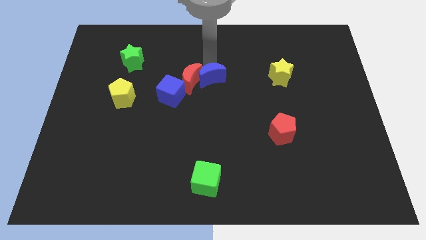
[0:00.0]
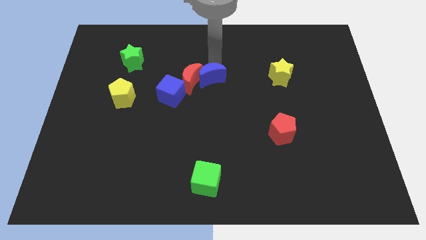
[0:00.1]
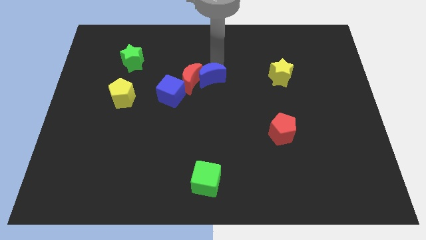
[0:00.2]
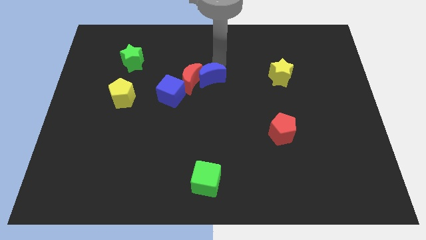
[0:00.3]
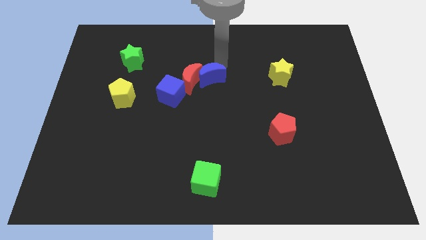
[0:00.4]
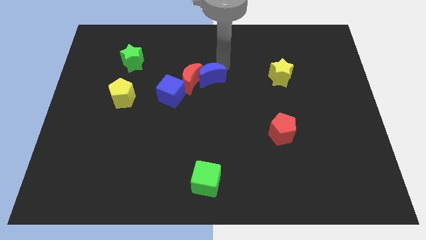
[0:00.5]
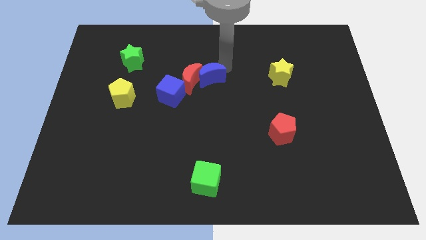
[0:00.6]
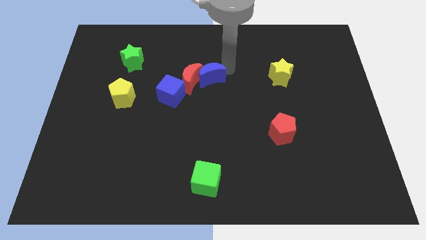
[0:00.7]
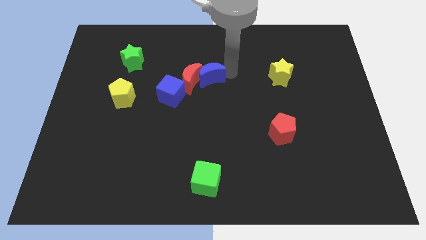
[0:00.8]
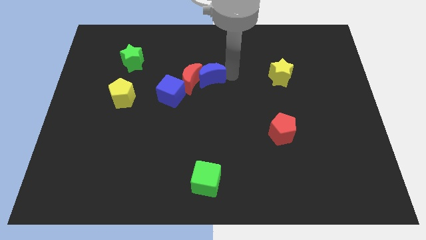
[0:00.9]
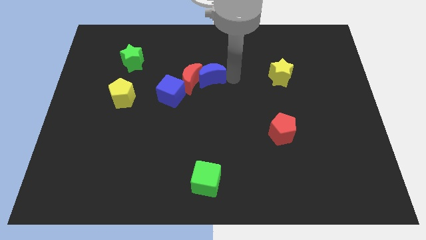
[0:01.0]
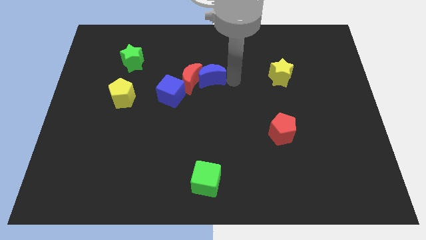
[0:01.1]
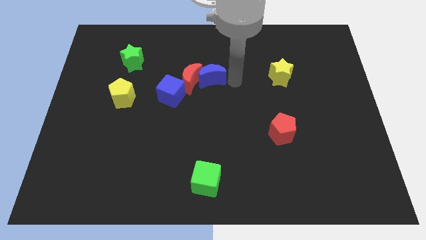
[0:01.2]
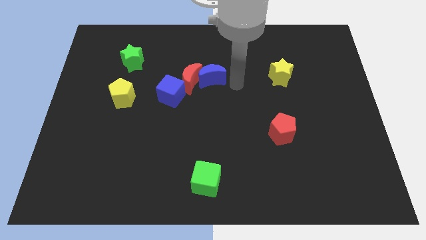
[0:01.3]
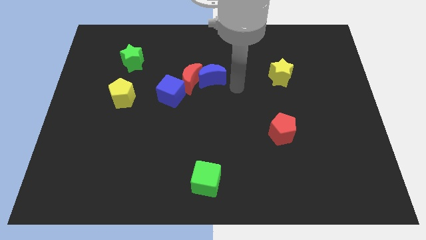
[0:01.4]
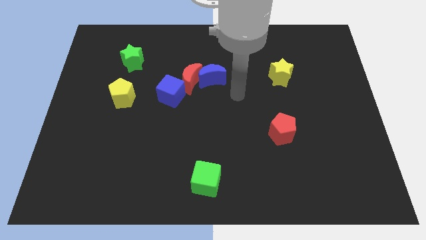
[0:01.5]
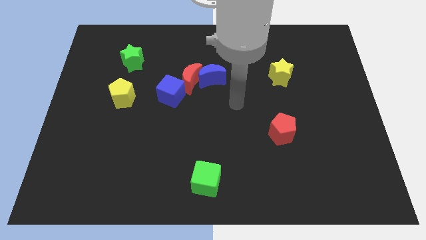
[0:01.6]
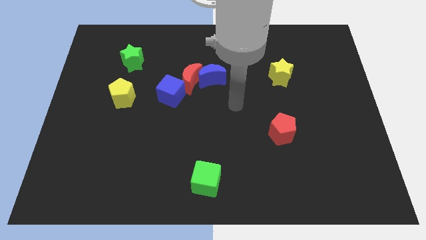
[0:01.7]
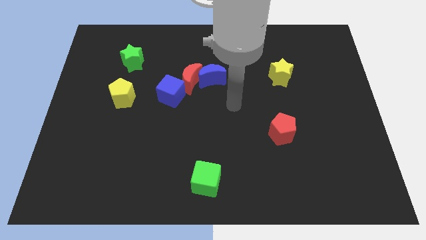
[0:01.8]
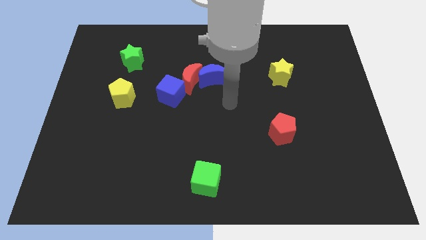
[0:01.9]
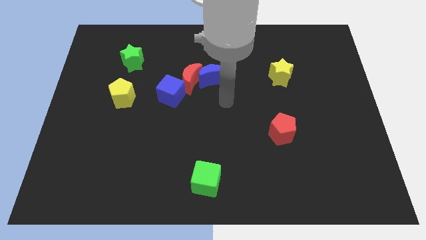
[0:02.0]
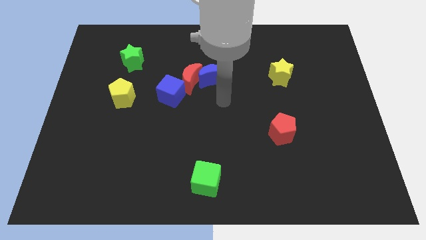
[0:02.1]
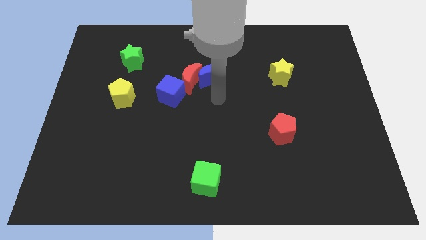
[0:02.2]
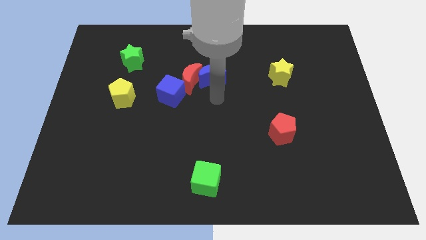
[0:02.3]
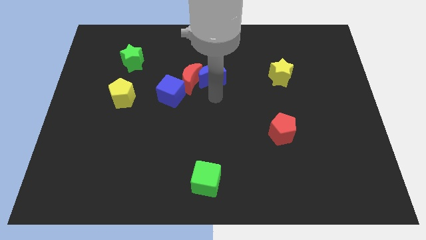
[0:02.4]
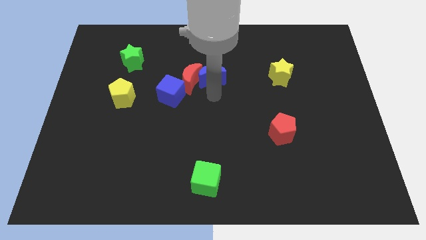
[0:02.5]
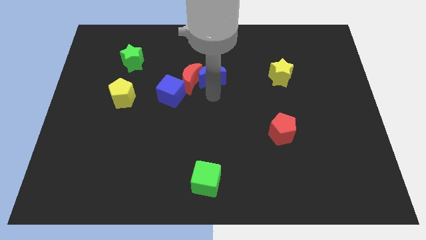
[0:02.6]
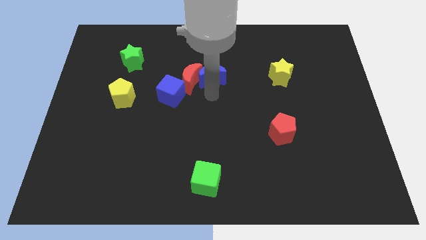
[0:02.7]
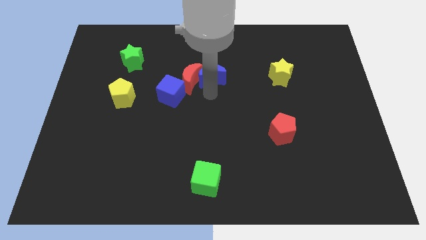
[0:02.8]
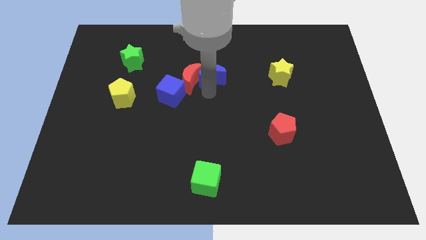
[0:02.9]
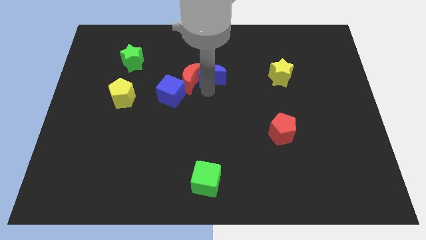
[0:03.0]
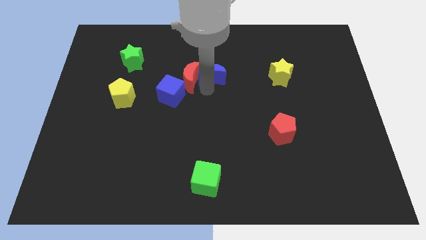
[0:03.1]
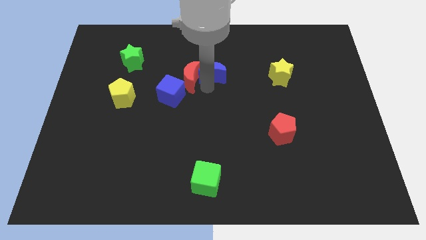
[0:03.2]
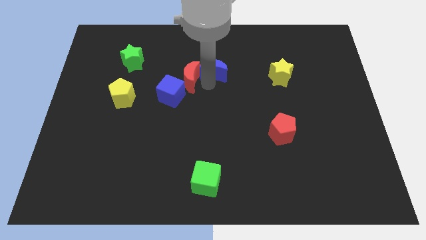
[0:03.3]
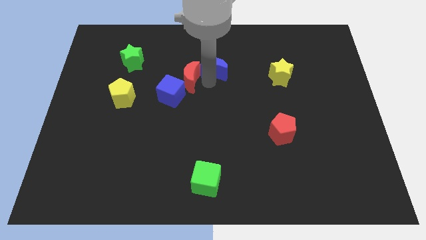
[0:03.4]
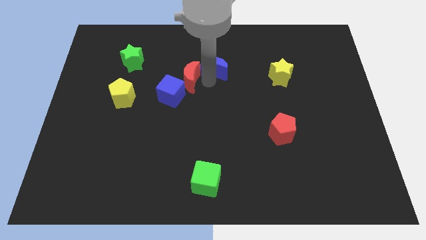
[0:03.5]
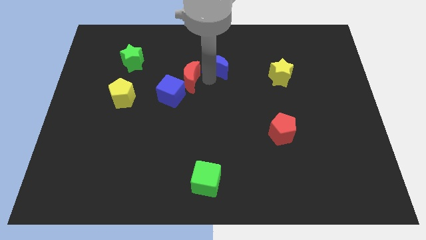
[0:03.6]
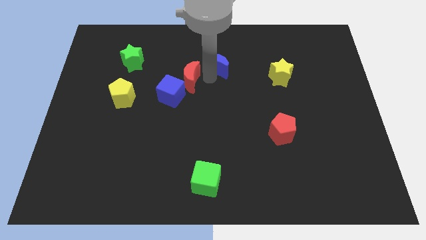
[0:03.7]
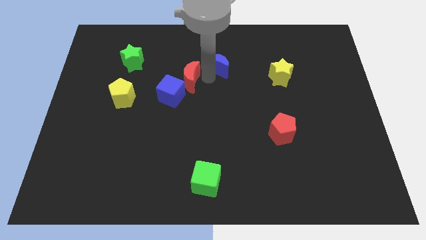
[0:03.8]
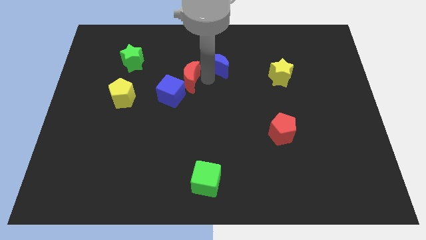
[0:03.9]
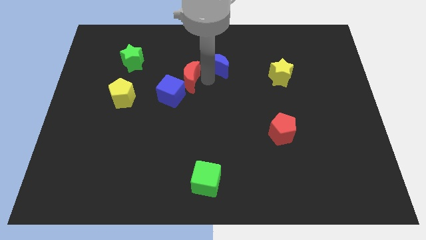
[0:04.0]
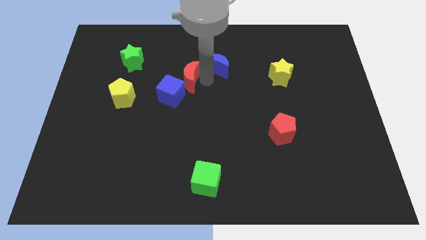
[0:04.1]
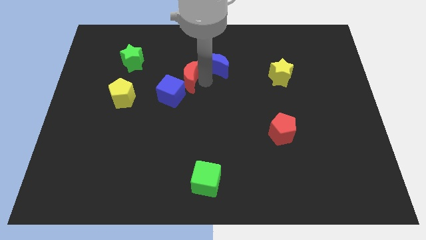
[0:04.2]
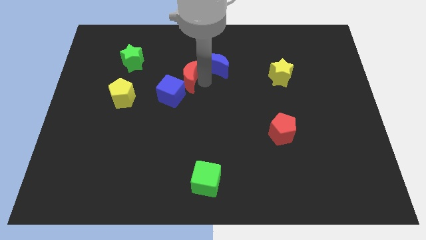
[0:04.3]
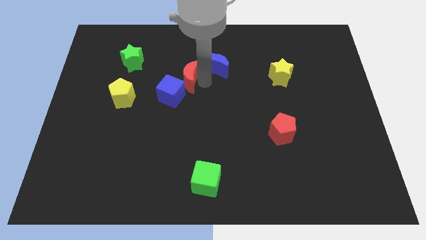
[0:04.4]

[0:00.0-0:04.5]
move the blue crescent slightly to the top

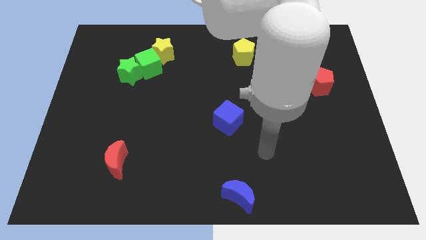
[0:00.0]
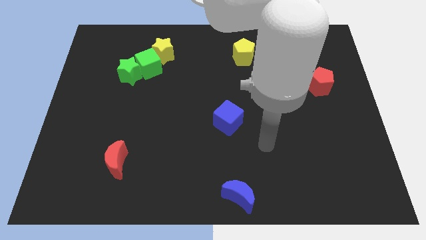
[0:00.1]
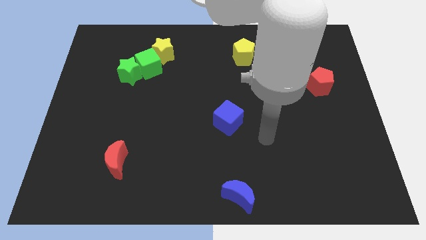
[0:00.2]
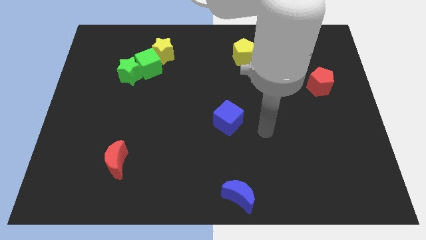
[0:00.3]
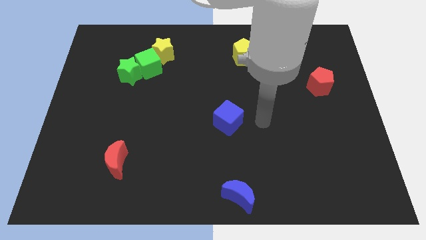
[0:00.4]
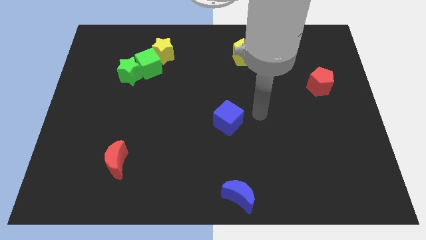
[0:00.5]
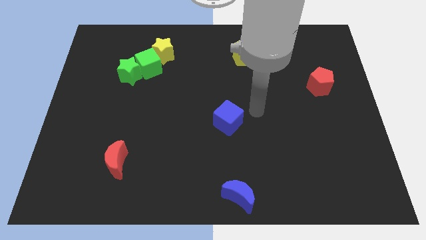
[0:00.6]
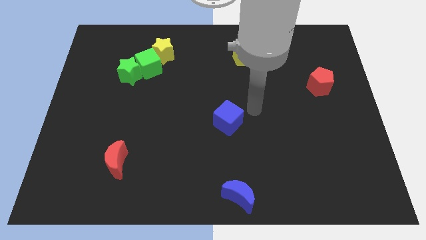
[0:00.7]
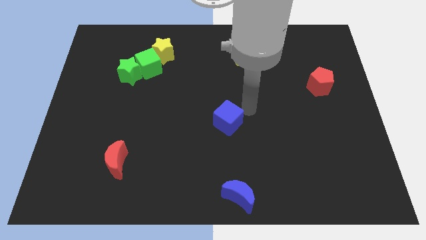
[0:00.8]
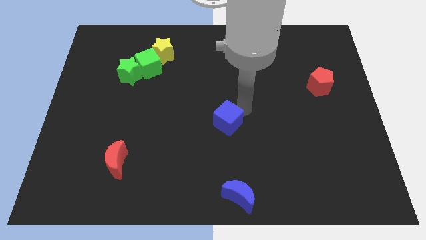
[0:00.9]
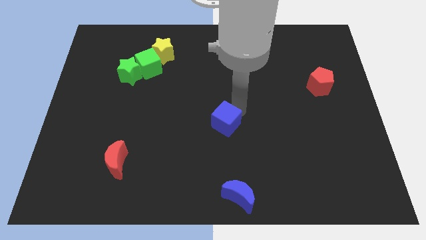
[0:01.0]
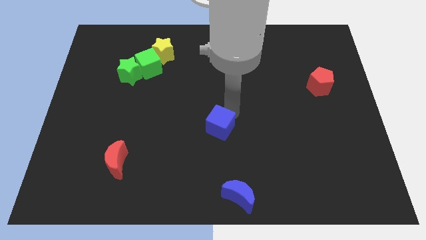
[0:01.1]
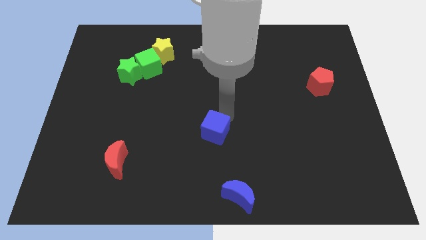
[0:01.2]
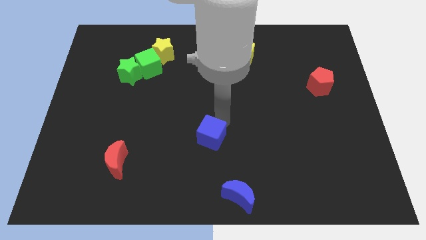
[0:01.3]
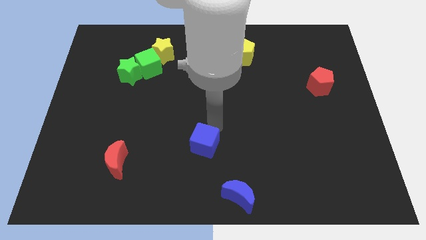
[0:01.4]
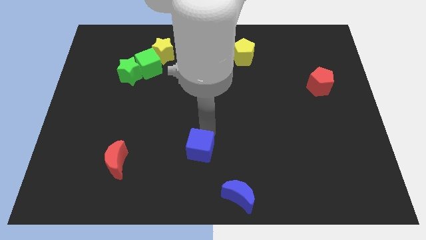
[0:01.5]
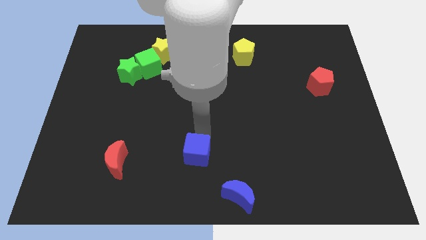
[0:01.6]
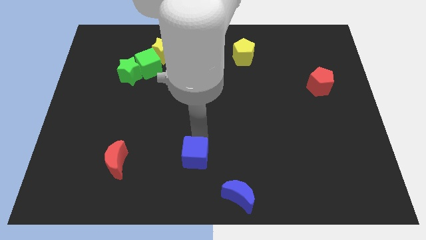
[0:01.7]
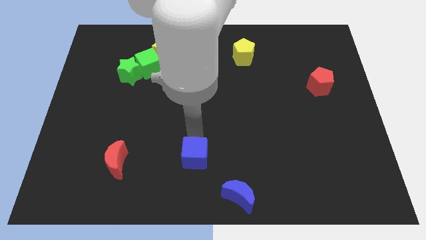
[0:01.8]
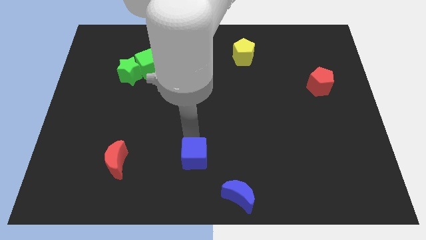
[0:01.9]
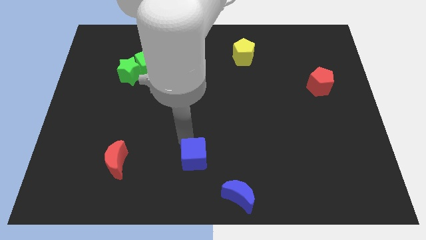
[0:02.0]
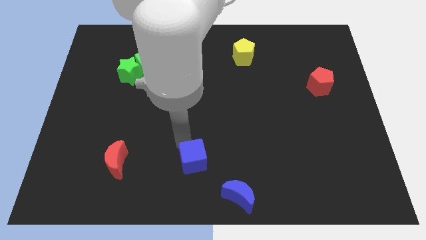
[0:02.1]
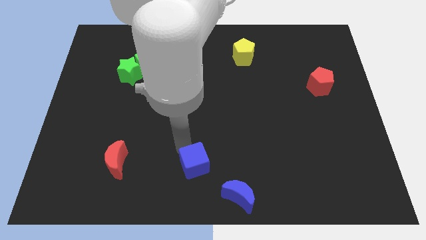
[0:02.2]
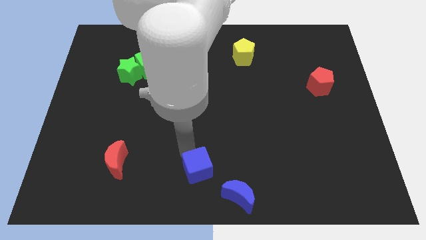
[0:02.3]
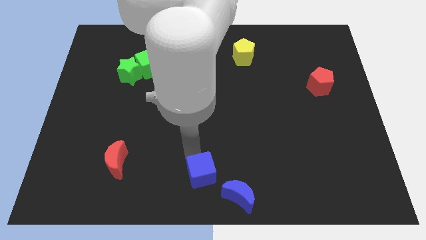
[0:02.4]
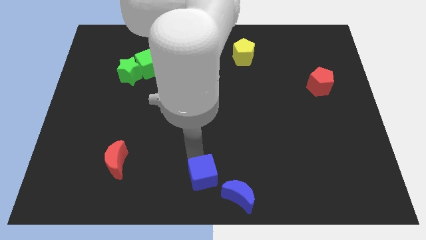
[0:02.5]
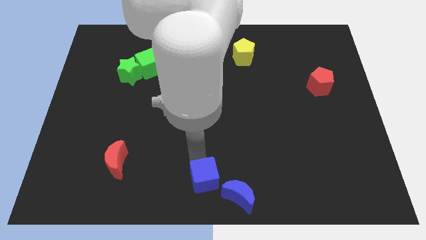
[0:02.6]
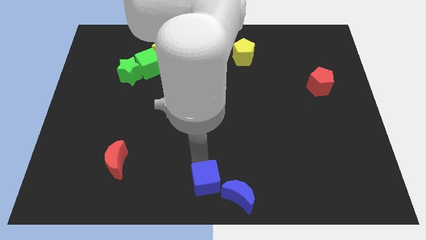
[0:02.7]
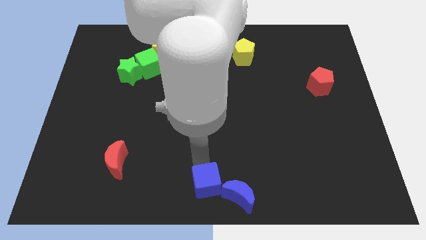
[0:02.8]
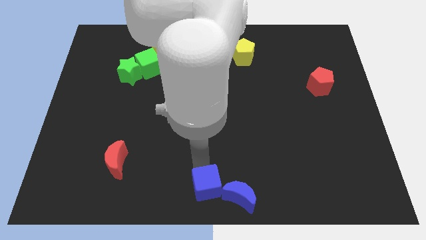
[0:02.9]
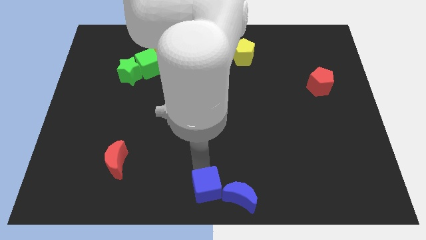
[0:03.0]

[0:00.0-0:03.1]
move blue cube towards the blue moon

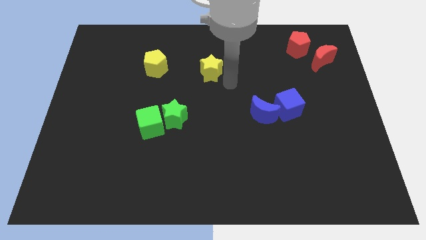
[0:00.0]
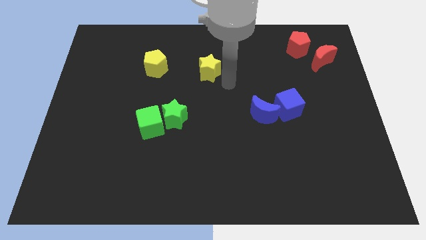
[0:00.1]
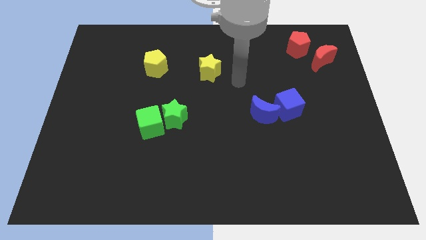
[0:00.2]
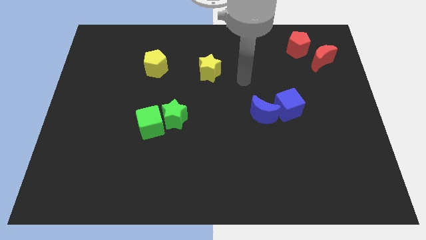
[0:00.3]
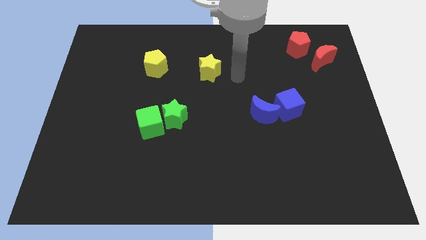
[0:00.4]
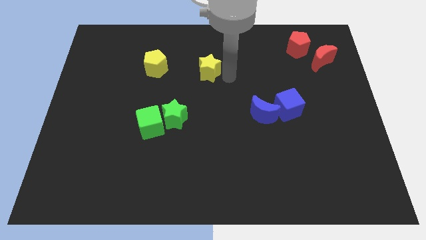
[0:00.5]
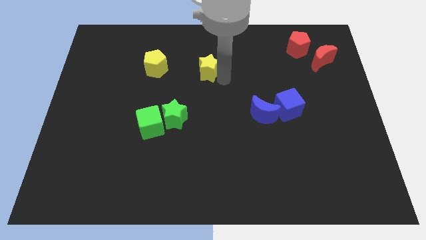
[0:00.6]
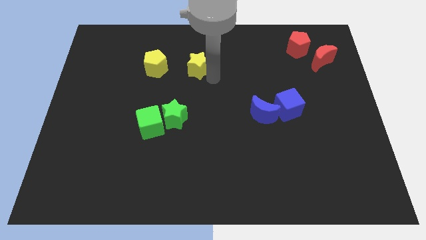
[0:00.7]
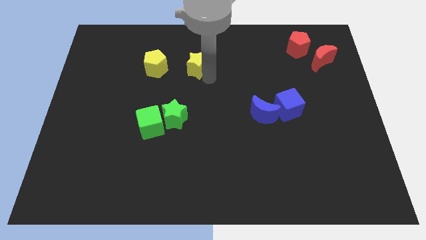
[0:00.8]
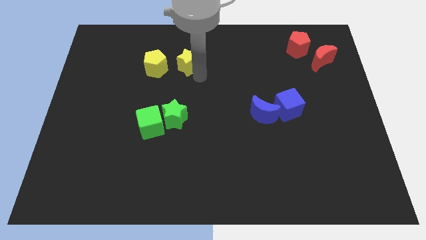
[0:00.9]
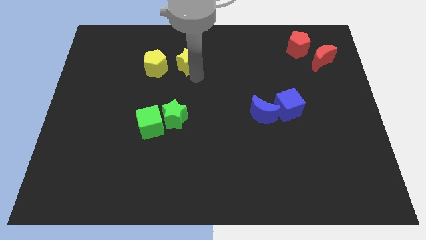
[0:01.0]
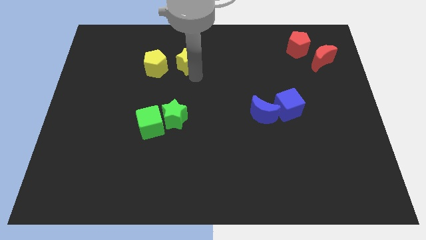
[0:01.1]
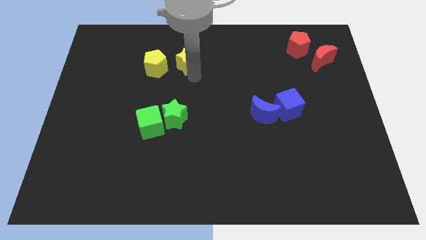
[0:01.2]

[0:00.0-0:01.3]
move the yellow star close to the yellow pentagon
